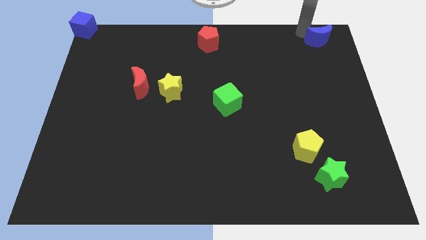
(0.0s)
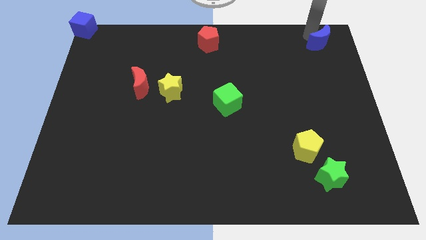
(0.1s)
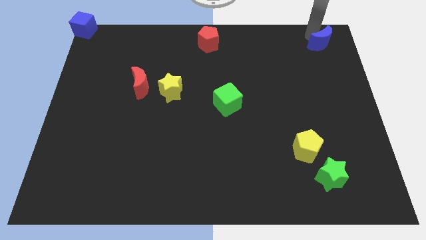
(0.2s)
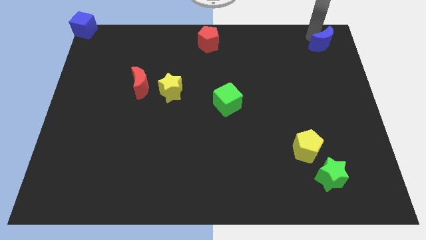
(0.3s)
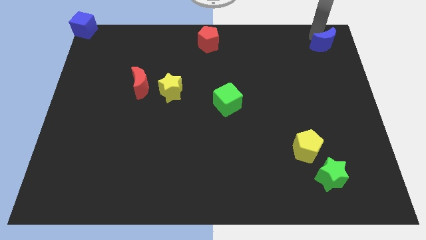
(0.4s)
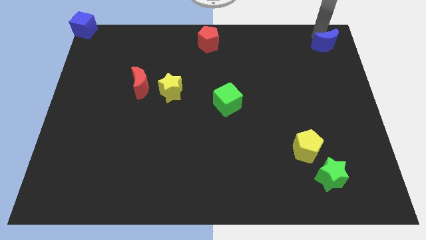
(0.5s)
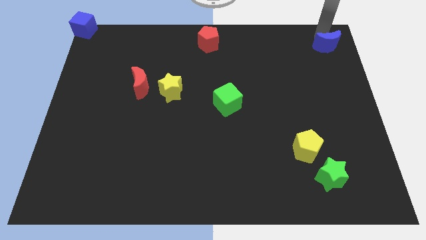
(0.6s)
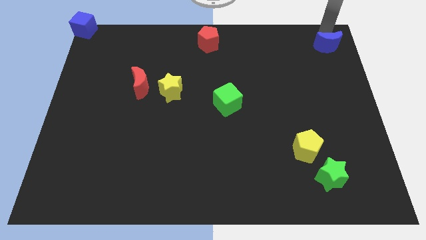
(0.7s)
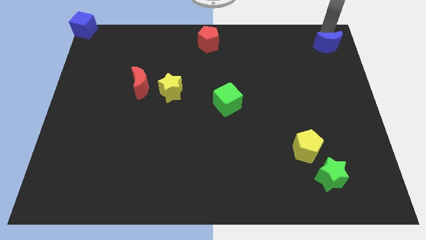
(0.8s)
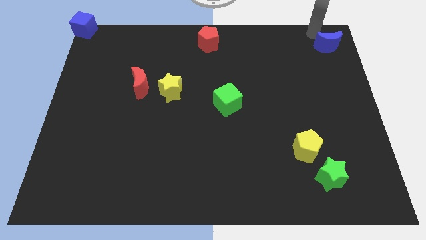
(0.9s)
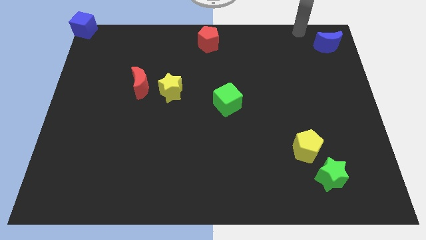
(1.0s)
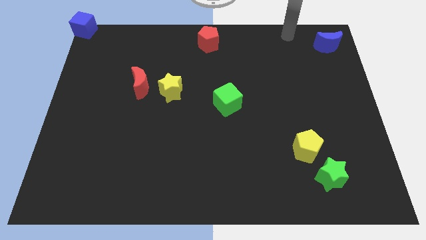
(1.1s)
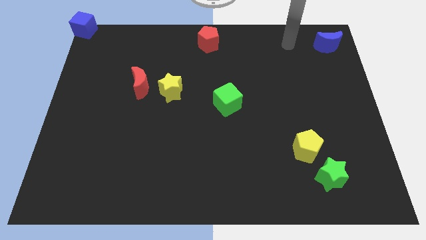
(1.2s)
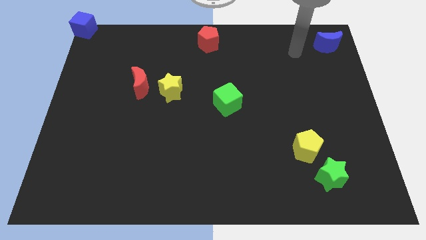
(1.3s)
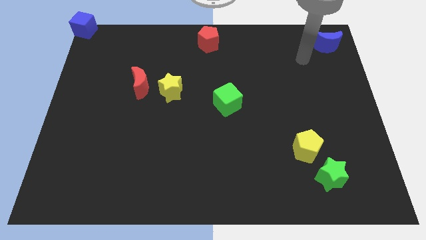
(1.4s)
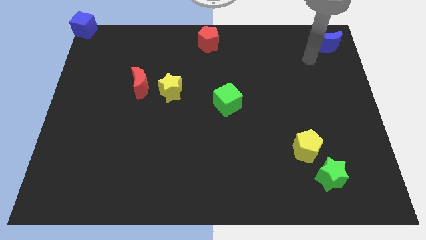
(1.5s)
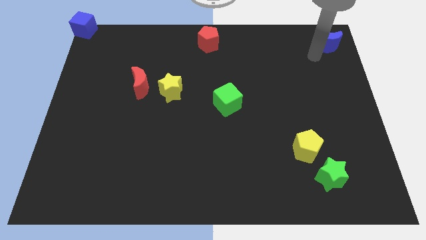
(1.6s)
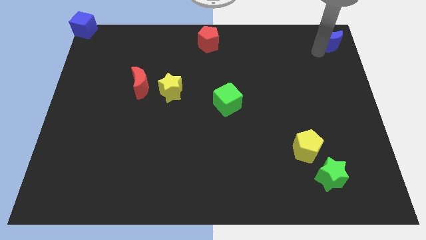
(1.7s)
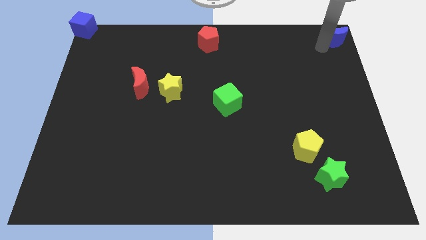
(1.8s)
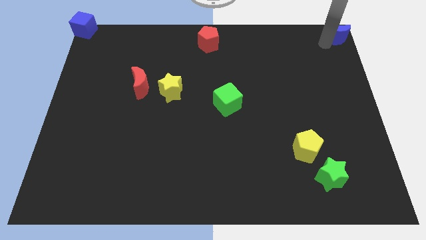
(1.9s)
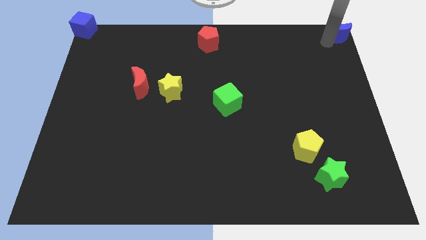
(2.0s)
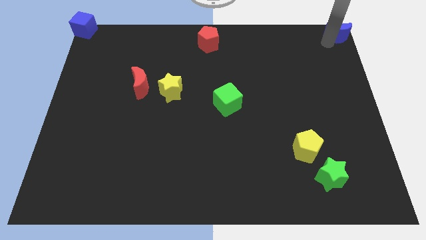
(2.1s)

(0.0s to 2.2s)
move the blue crescent to the top right of the board

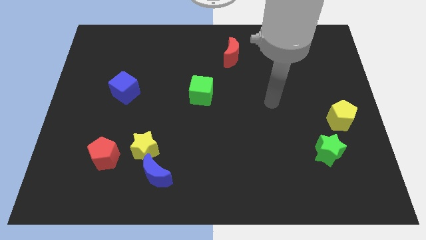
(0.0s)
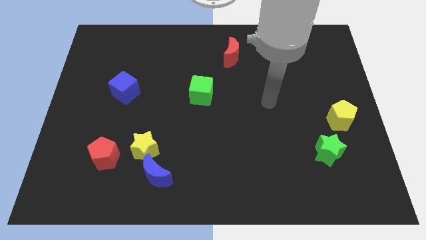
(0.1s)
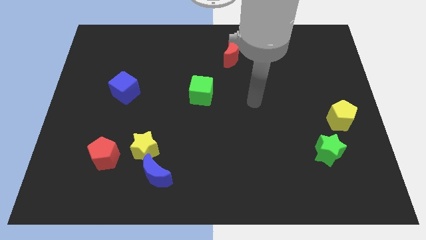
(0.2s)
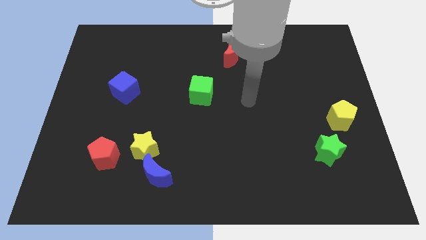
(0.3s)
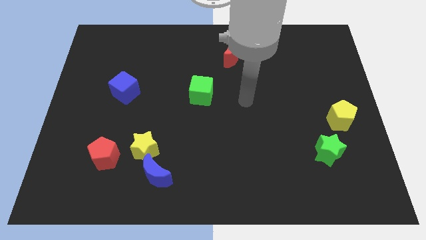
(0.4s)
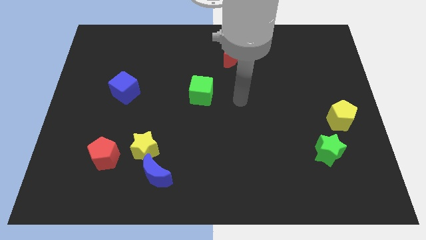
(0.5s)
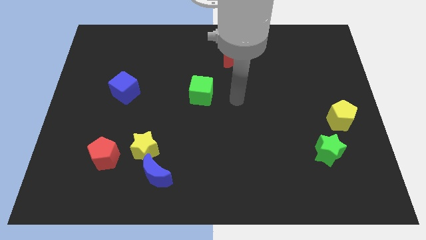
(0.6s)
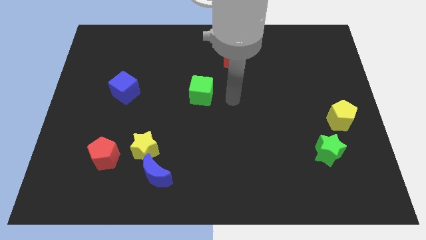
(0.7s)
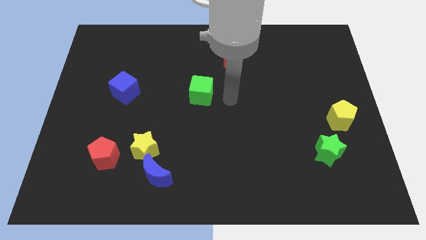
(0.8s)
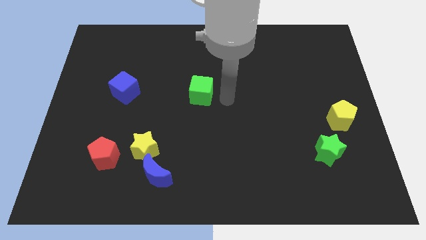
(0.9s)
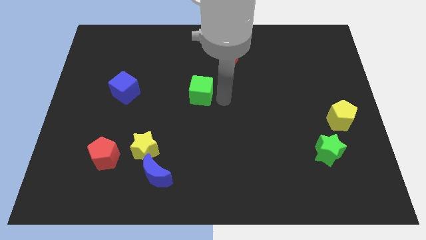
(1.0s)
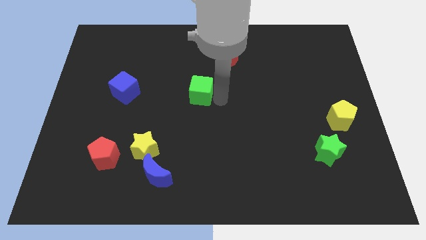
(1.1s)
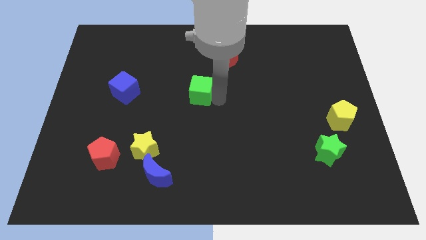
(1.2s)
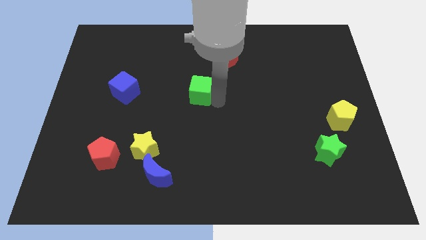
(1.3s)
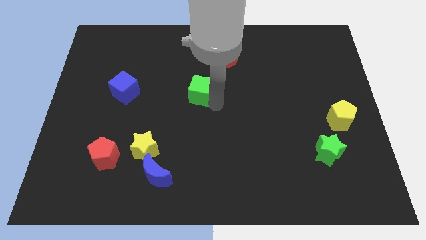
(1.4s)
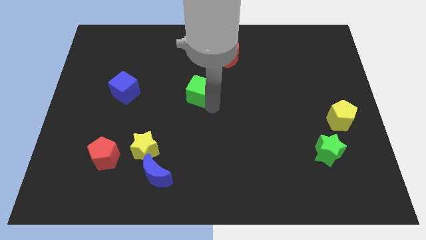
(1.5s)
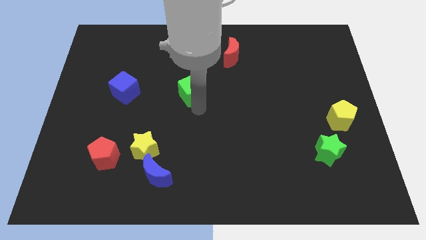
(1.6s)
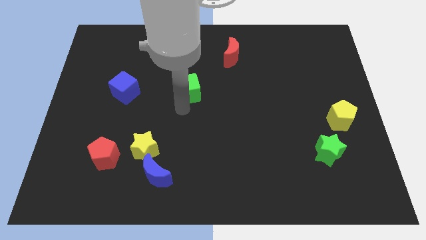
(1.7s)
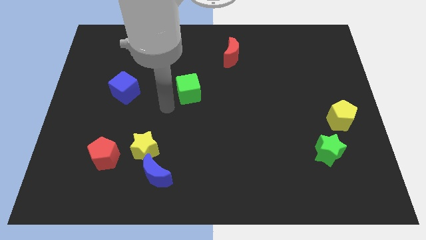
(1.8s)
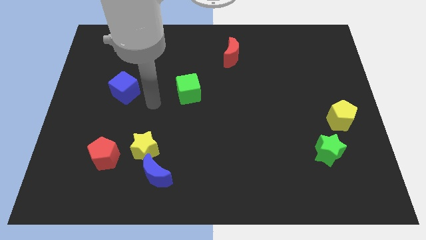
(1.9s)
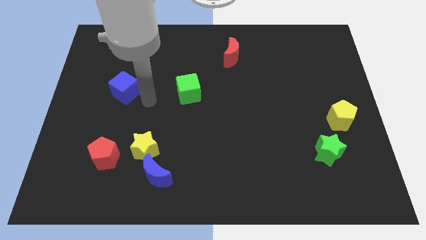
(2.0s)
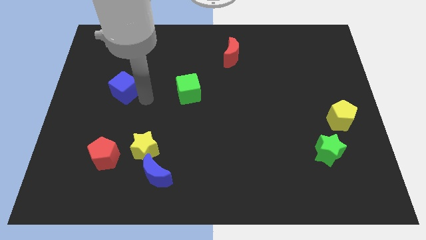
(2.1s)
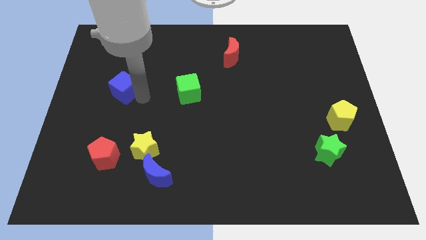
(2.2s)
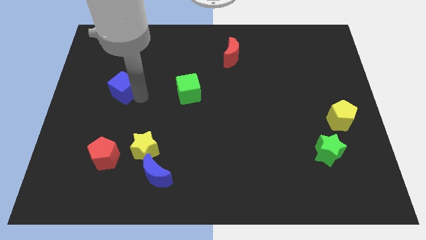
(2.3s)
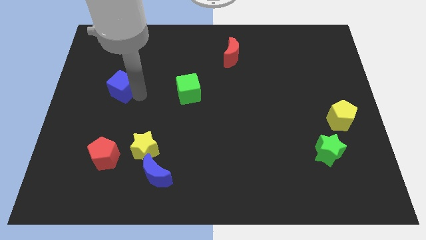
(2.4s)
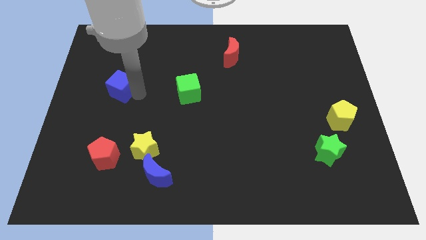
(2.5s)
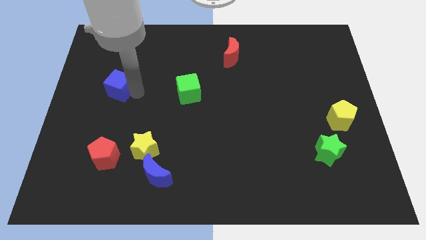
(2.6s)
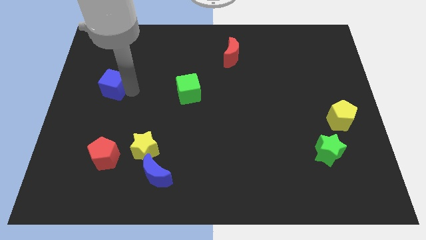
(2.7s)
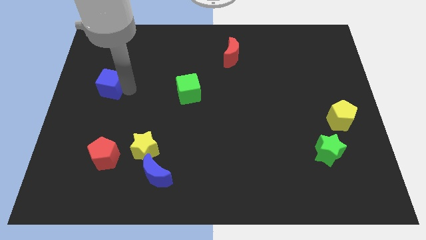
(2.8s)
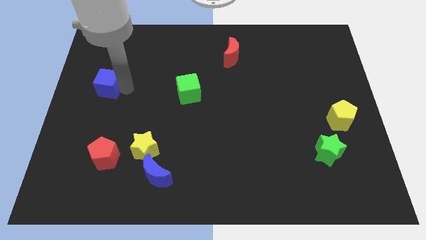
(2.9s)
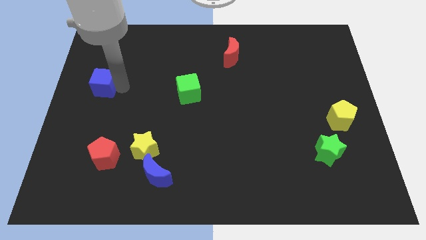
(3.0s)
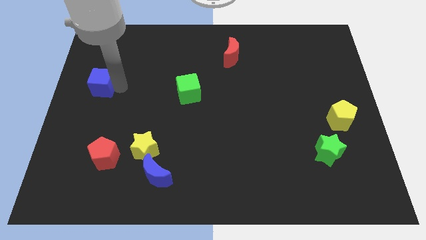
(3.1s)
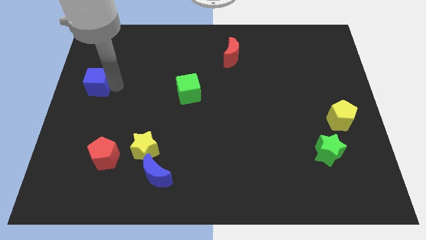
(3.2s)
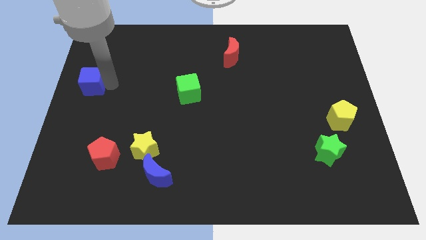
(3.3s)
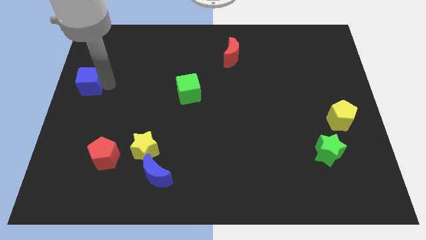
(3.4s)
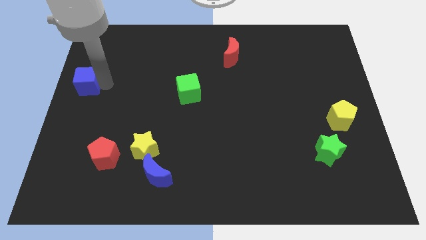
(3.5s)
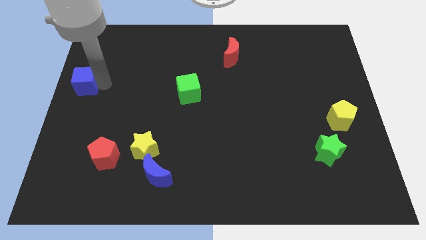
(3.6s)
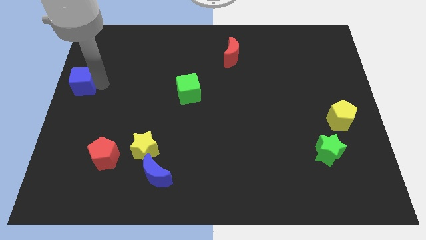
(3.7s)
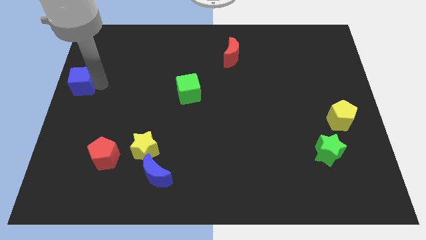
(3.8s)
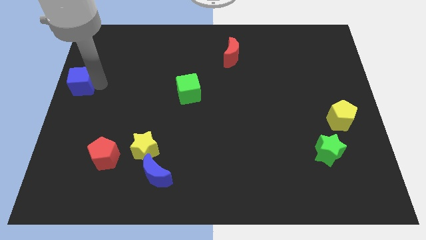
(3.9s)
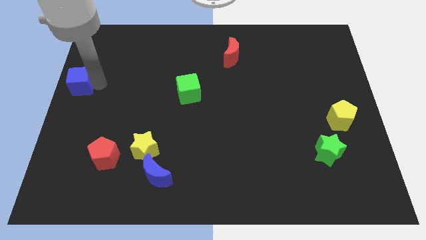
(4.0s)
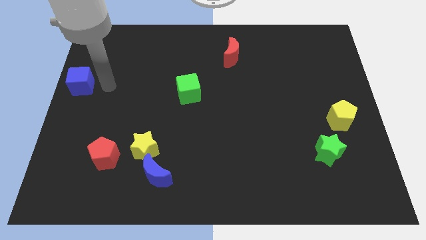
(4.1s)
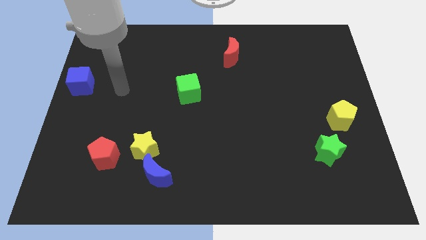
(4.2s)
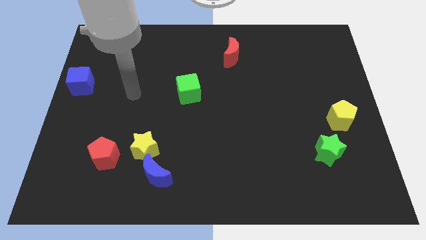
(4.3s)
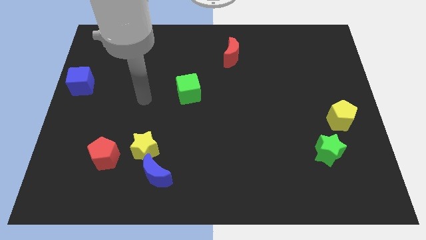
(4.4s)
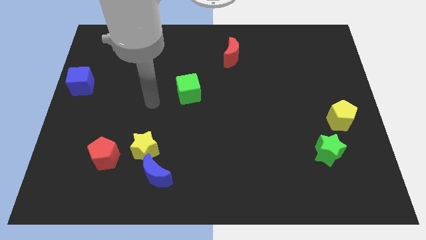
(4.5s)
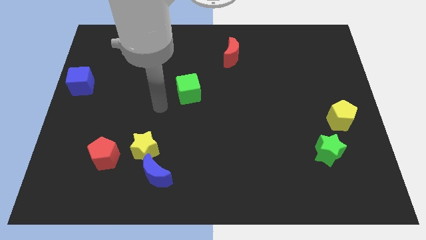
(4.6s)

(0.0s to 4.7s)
push the blue cube to the left side of the board

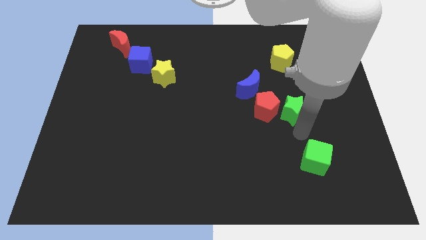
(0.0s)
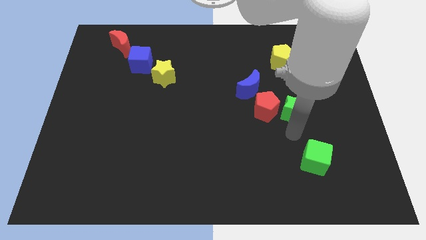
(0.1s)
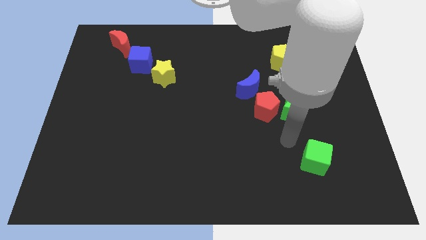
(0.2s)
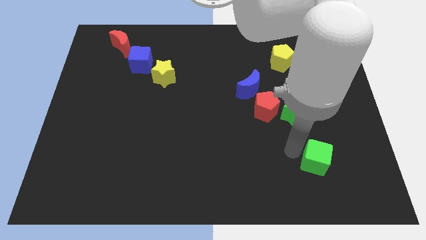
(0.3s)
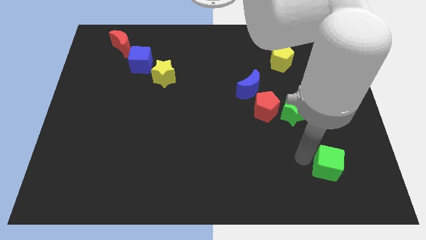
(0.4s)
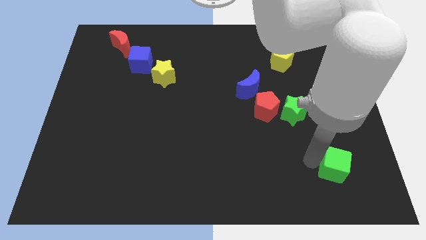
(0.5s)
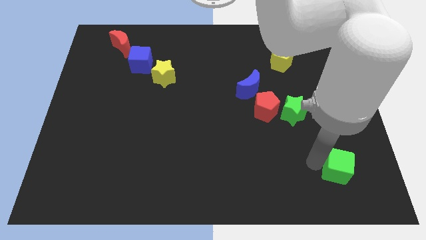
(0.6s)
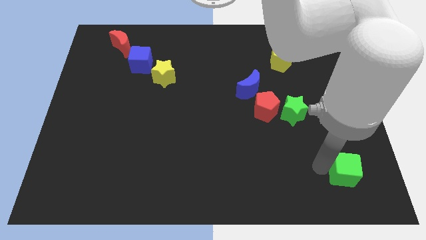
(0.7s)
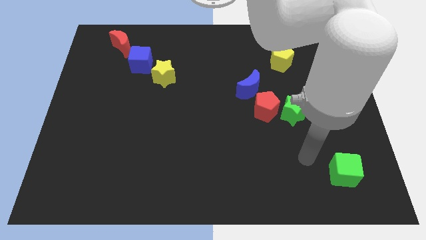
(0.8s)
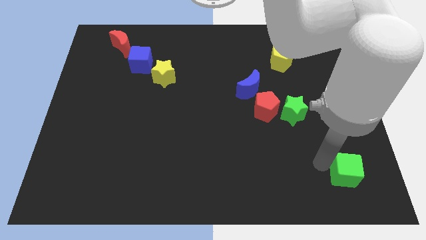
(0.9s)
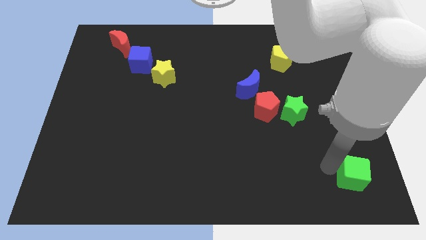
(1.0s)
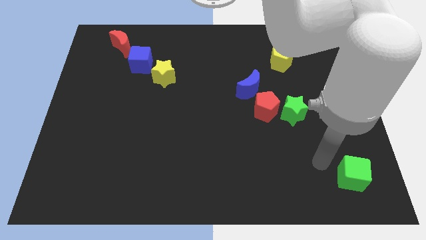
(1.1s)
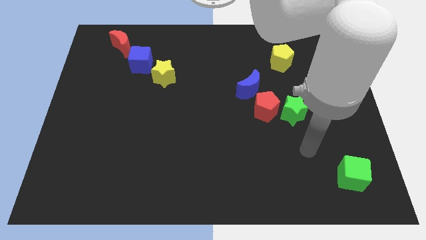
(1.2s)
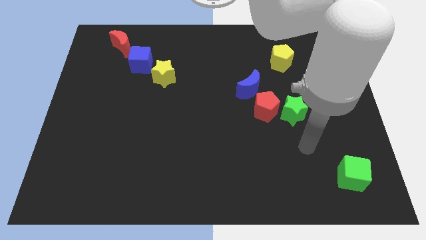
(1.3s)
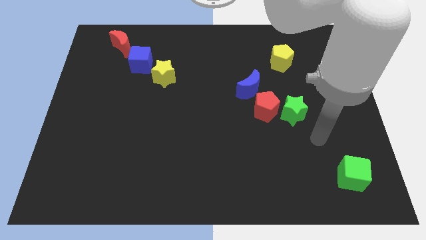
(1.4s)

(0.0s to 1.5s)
move the green cube towards the bottom right

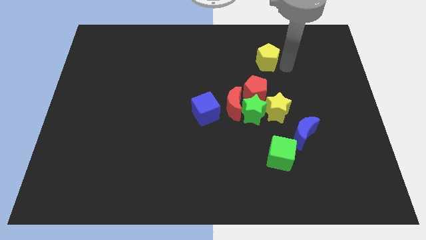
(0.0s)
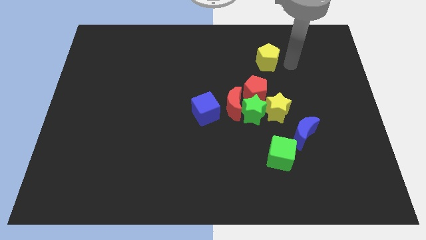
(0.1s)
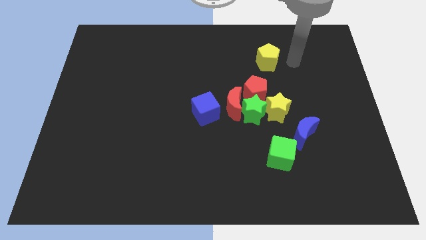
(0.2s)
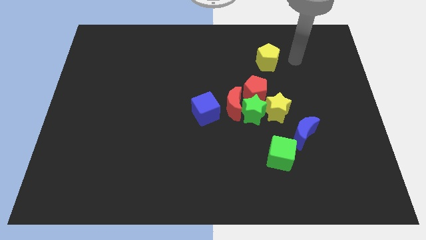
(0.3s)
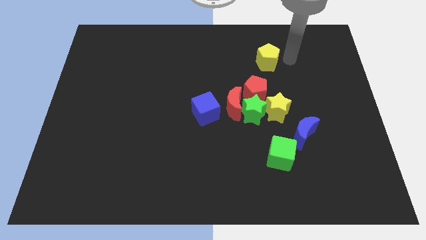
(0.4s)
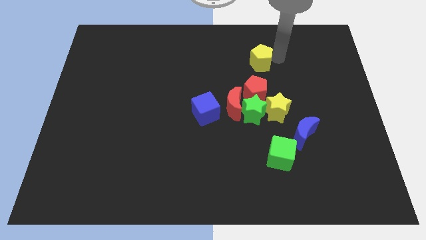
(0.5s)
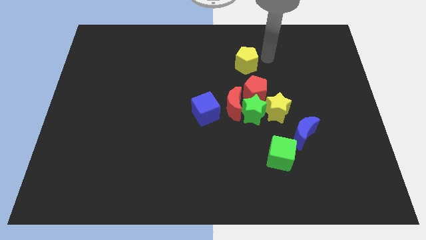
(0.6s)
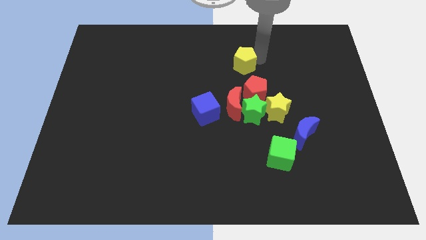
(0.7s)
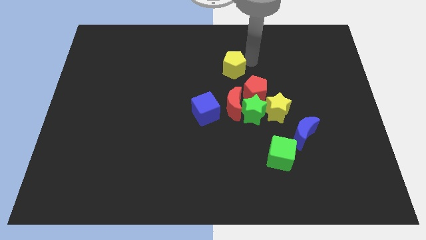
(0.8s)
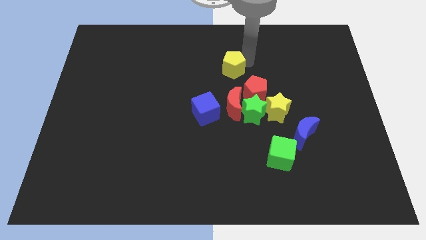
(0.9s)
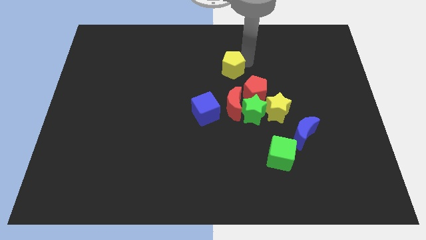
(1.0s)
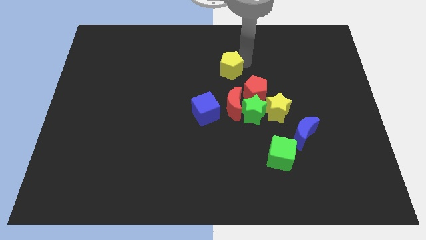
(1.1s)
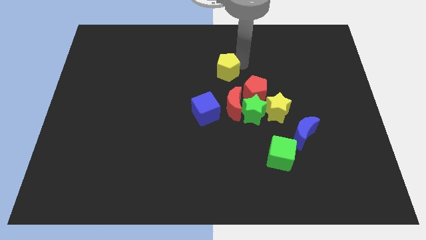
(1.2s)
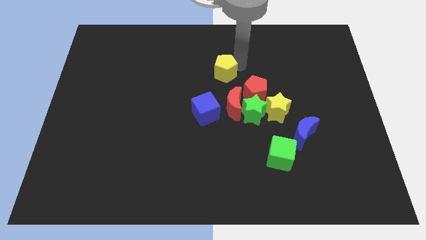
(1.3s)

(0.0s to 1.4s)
place yellow pentagon to the left
